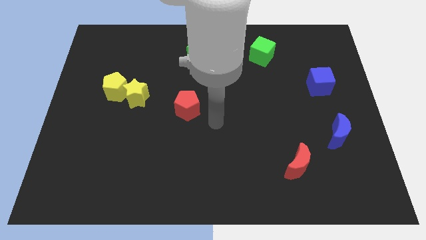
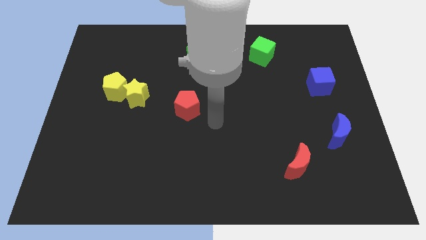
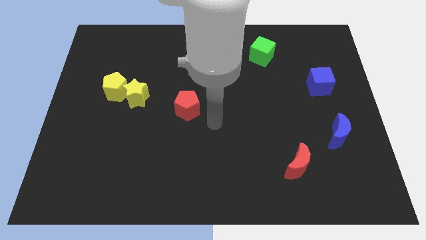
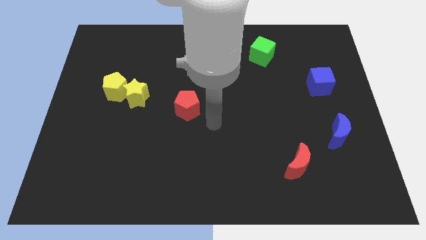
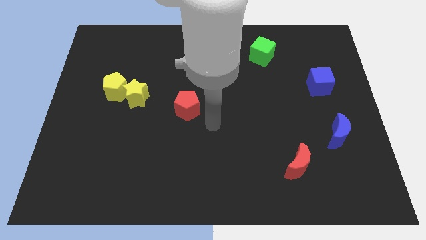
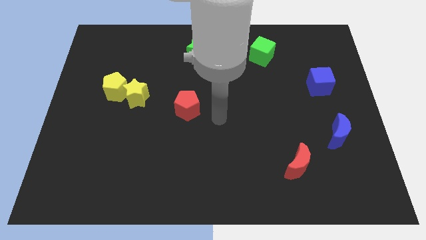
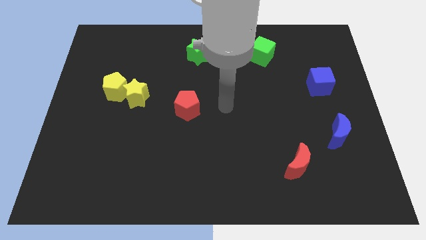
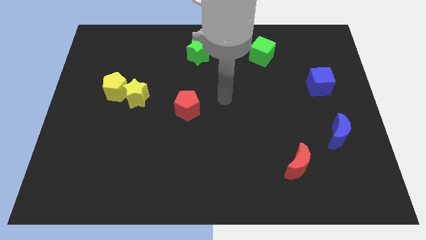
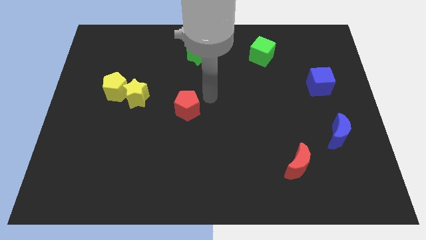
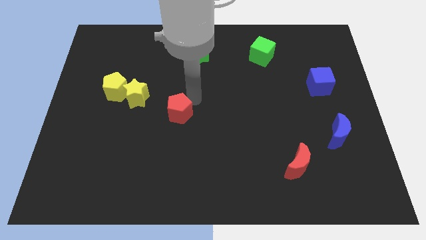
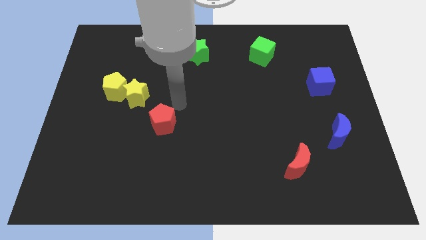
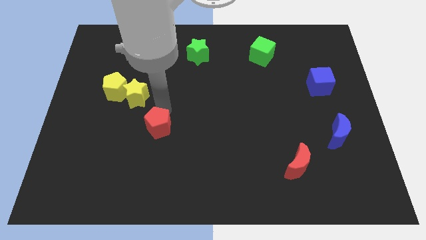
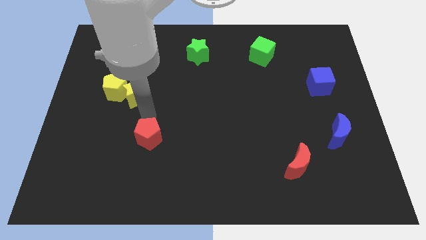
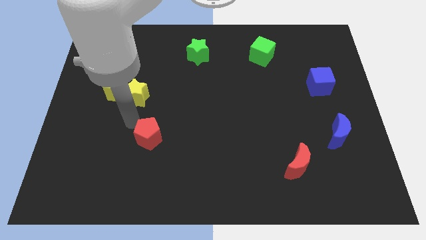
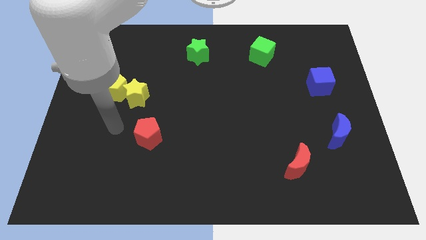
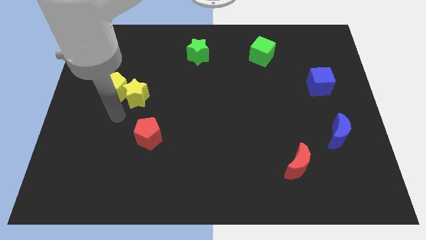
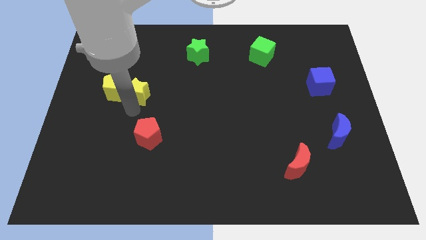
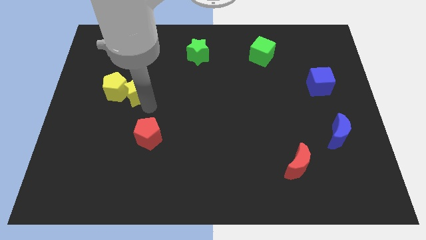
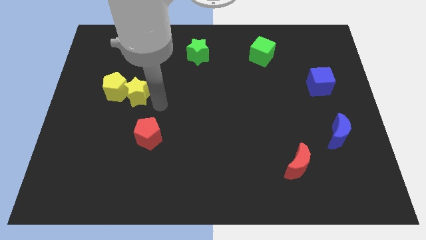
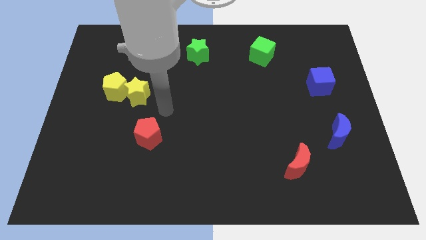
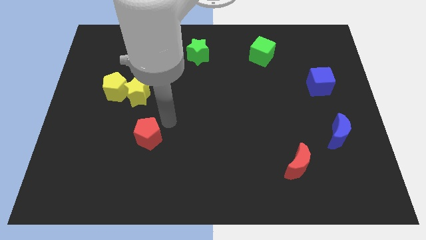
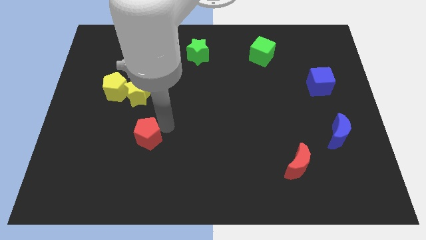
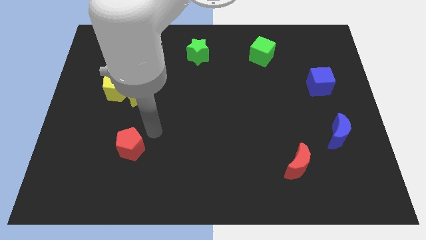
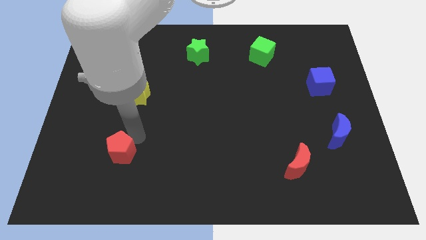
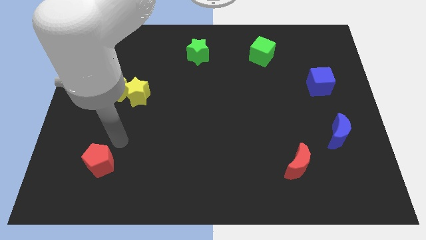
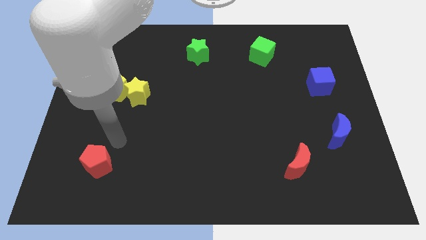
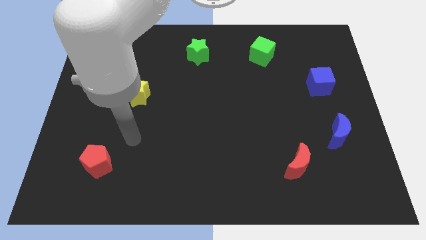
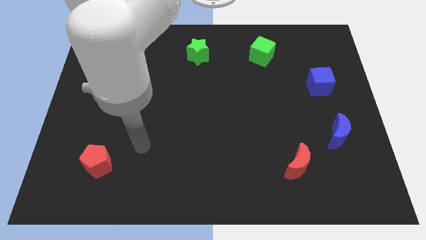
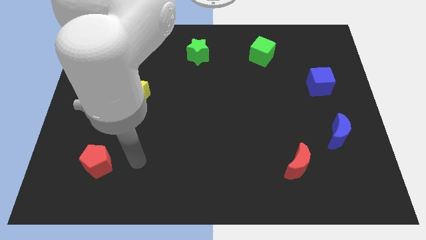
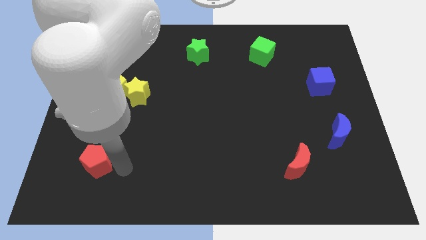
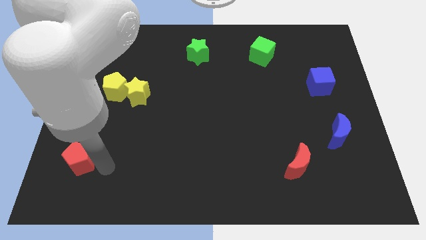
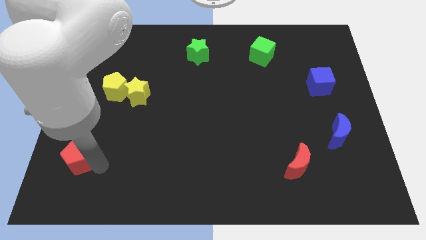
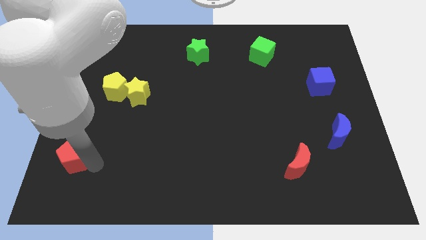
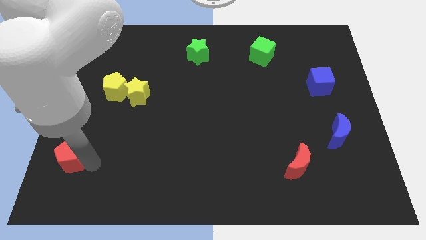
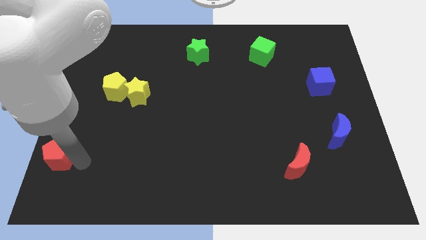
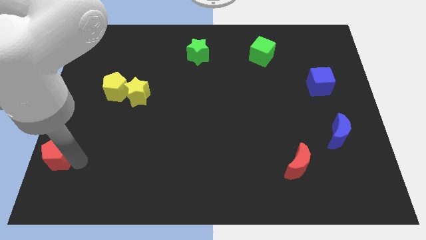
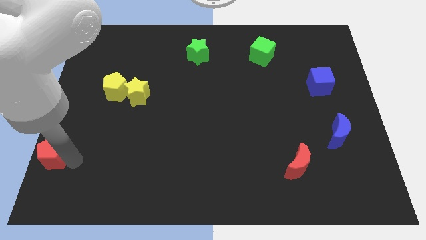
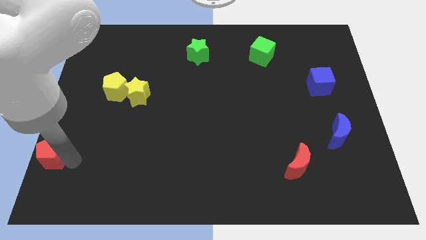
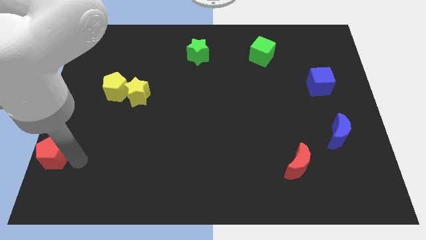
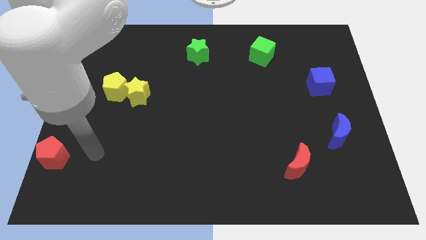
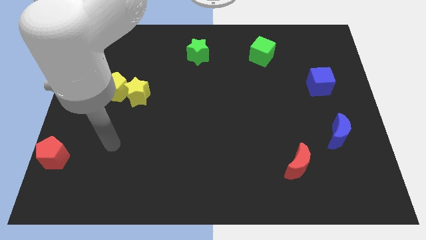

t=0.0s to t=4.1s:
move red pentagon to the bottom right of the board

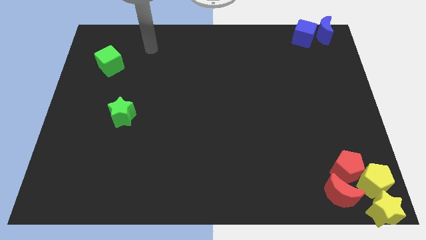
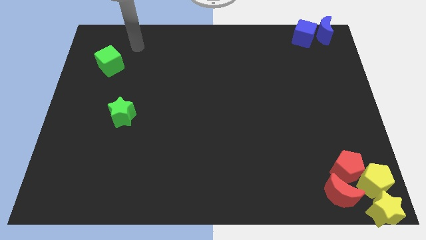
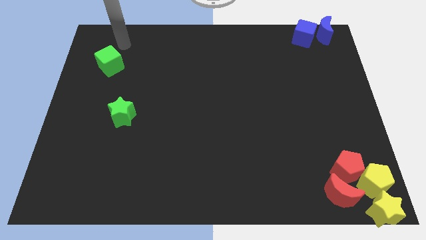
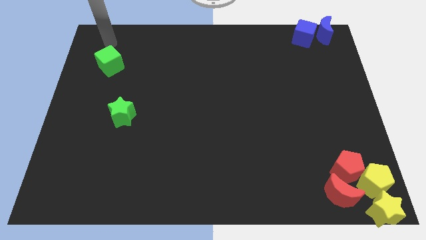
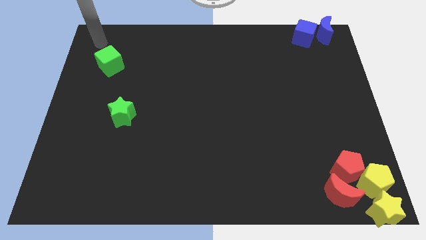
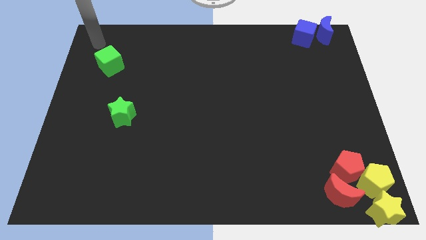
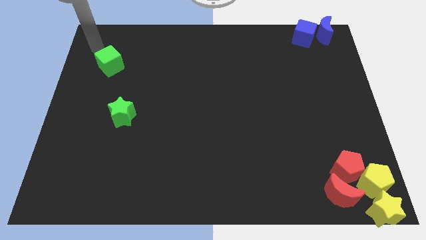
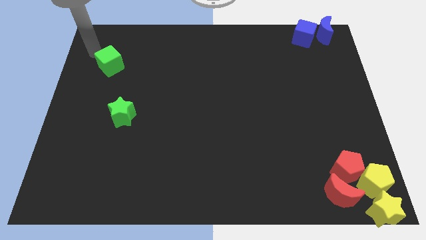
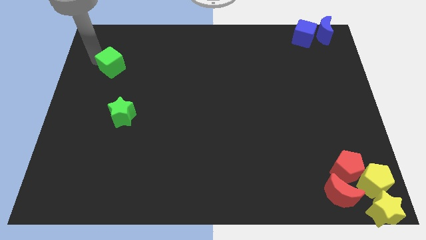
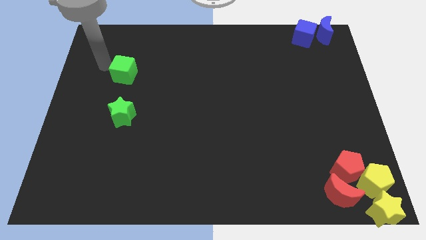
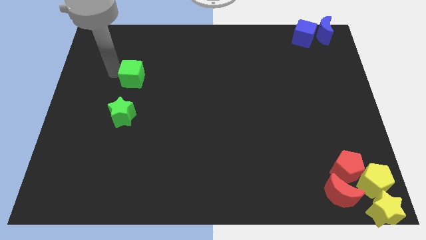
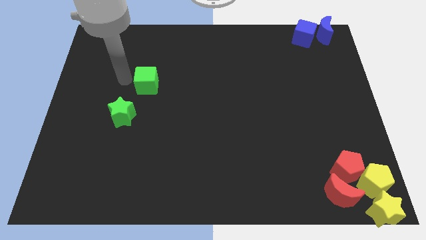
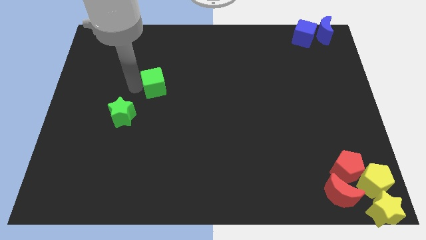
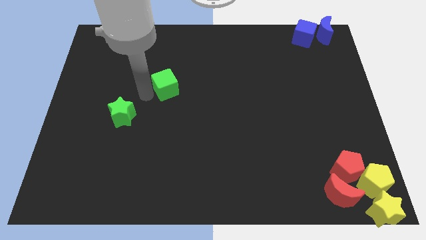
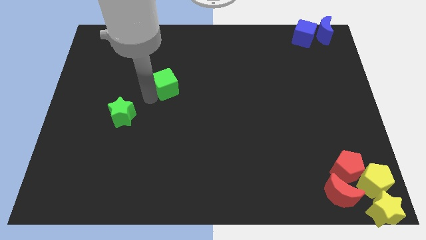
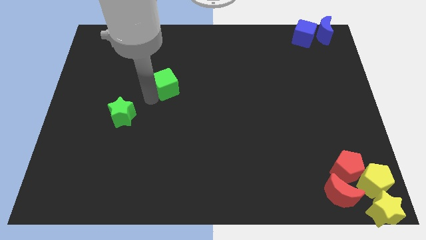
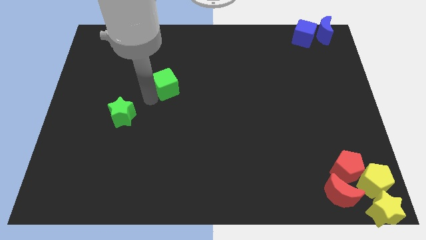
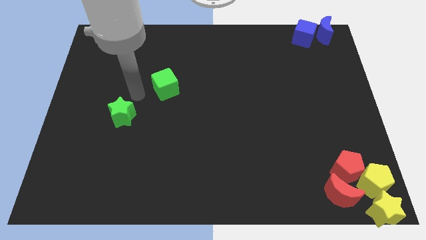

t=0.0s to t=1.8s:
push the green cube towards the center

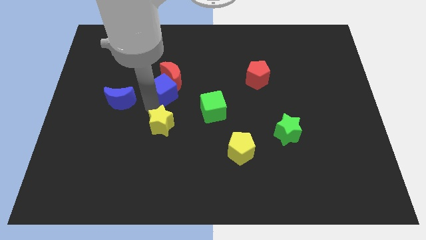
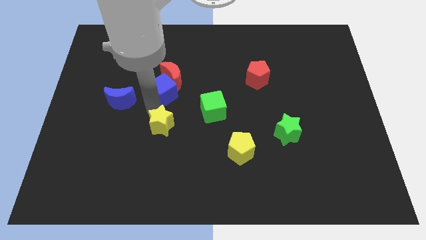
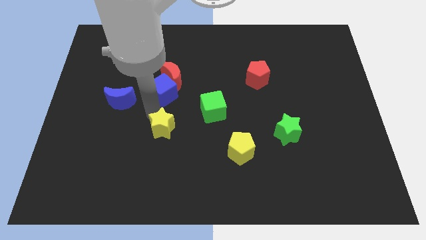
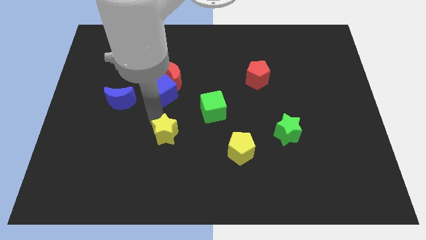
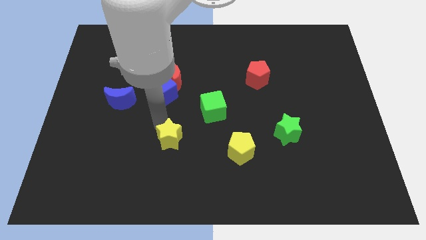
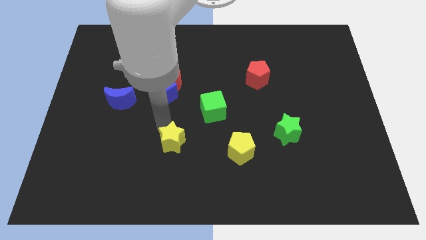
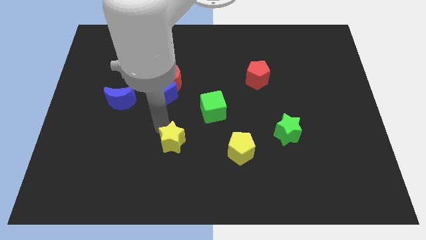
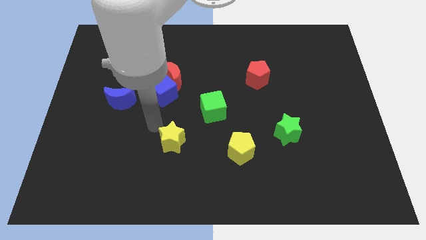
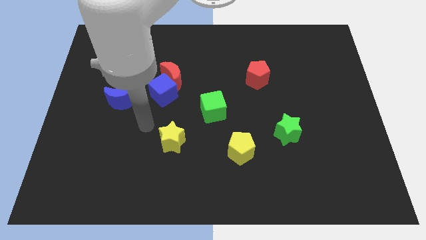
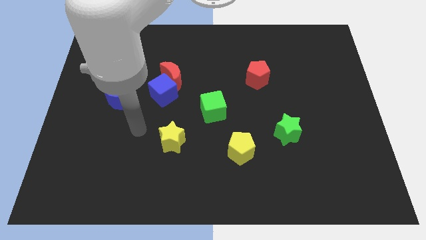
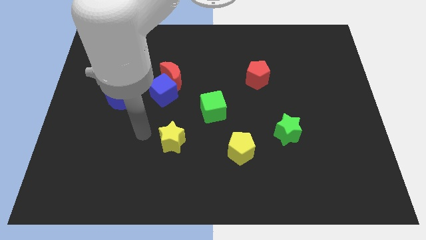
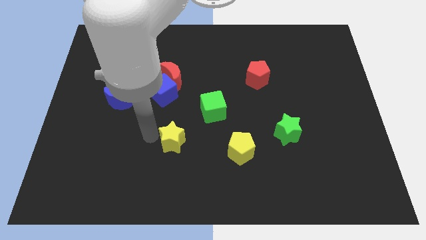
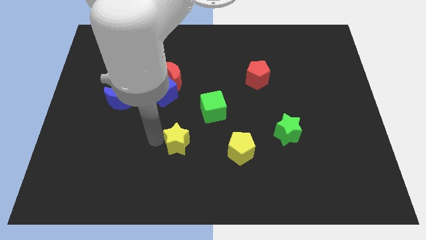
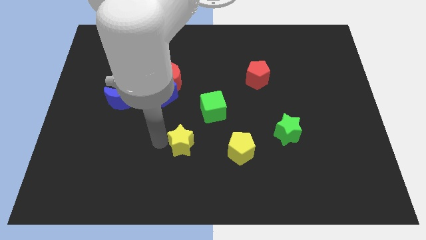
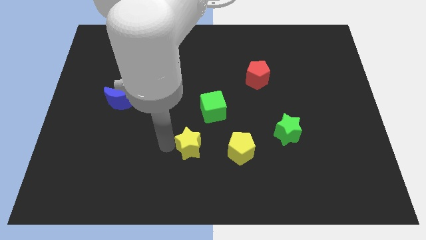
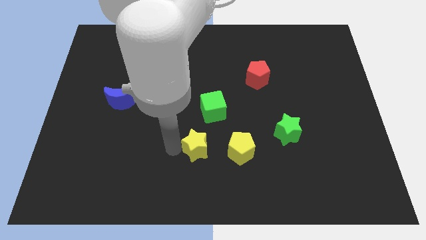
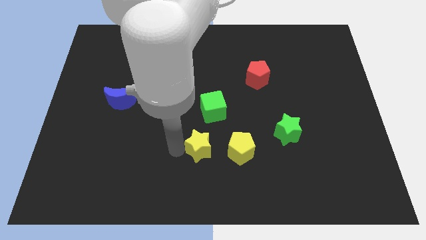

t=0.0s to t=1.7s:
push the yellow star to the bottom left of the green cube

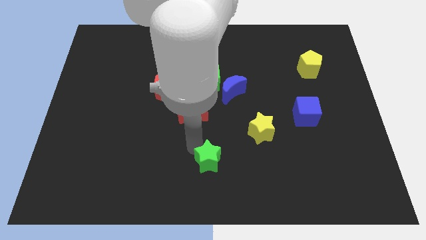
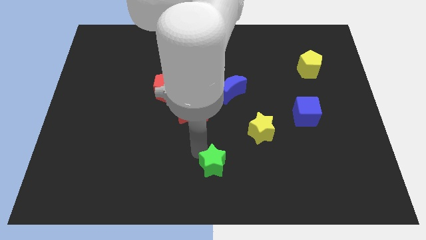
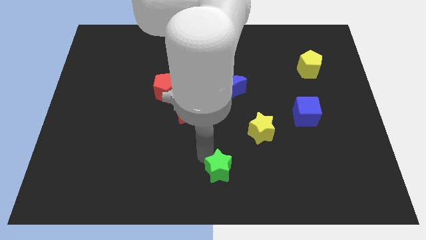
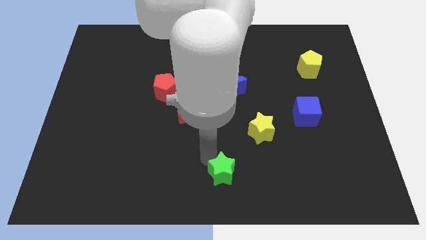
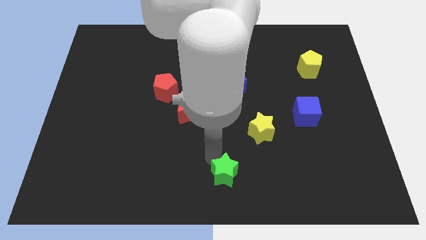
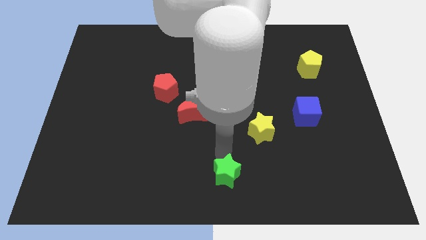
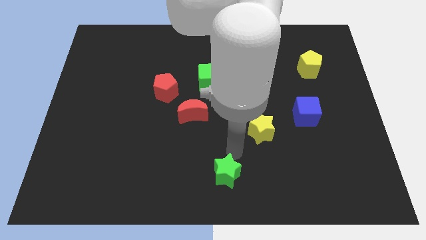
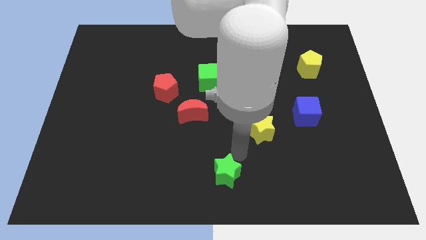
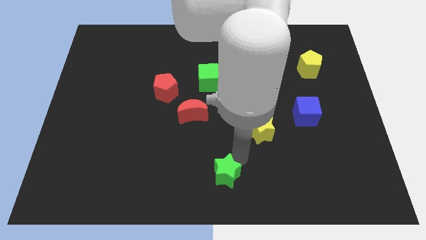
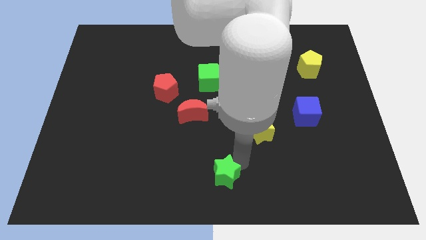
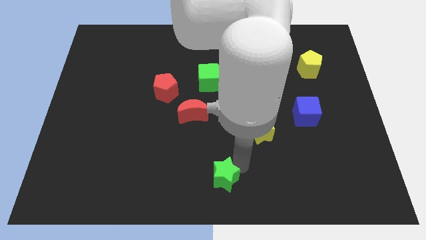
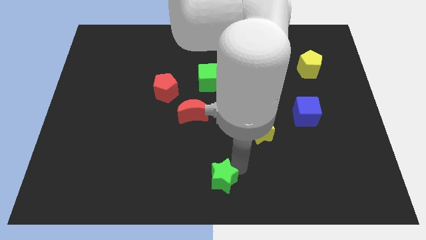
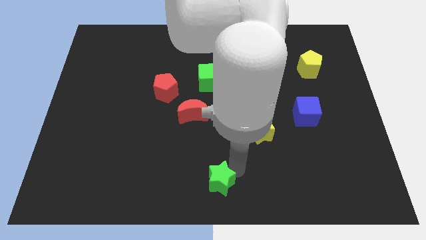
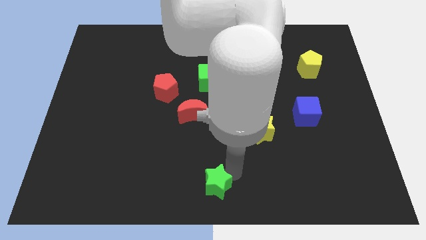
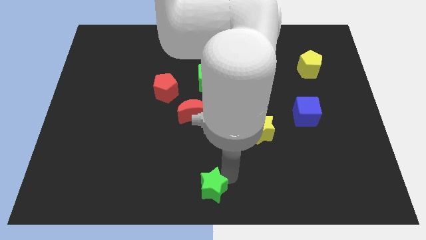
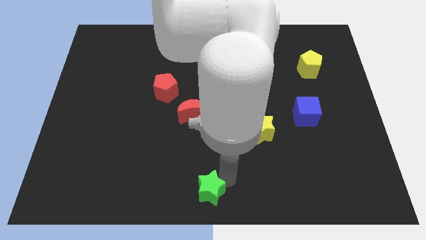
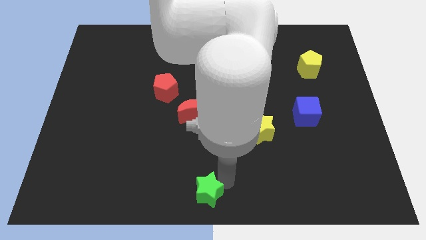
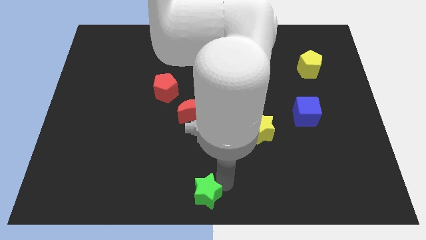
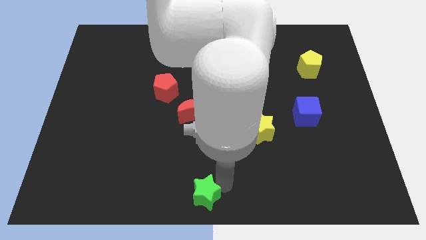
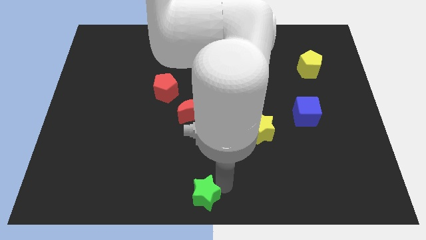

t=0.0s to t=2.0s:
place the green star towards the bottom center of the board
